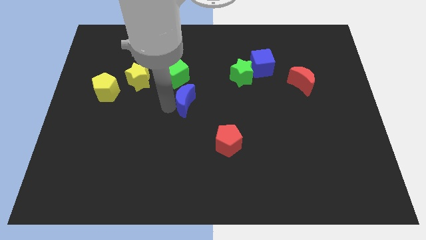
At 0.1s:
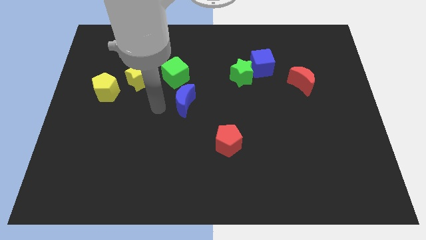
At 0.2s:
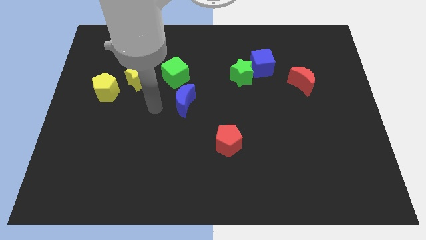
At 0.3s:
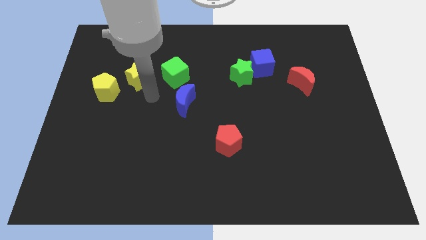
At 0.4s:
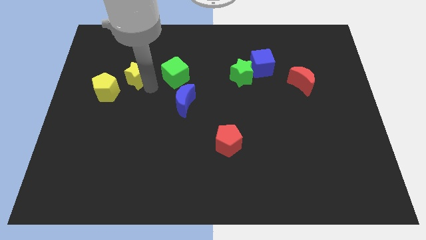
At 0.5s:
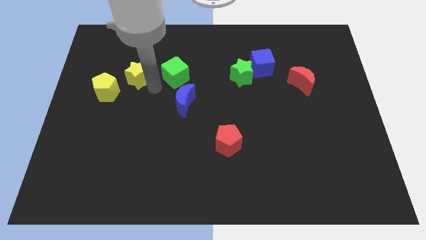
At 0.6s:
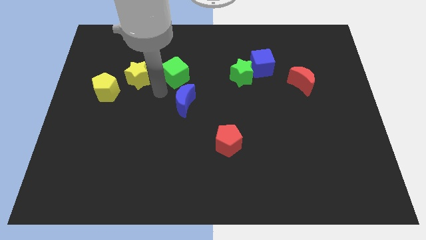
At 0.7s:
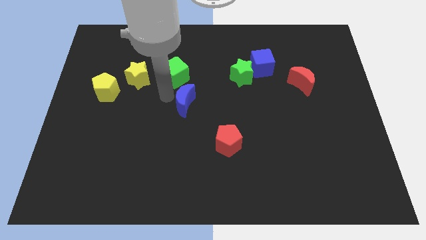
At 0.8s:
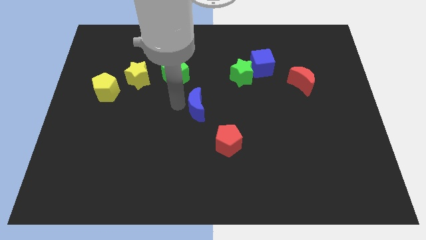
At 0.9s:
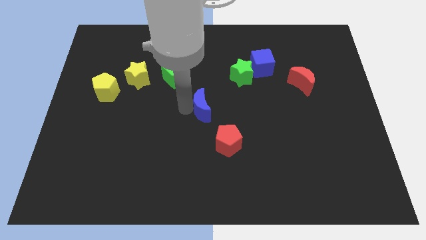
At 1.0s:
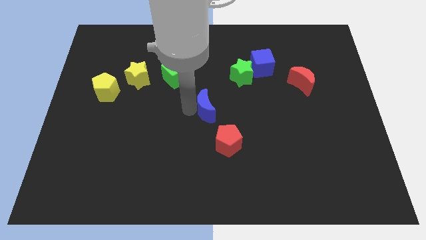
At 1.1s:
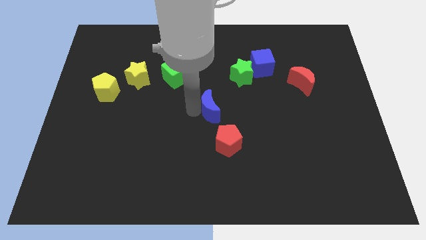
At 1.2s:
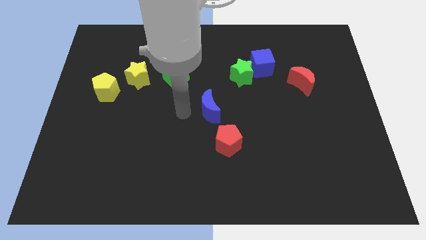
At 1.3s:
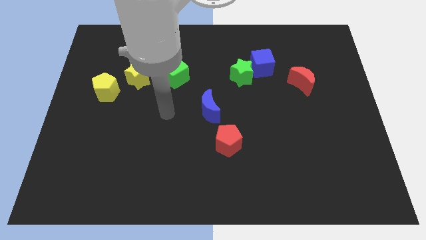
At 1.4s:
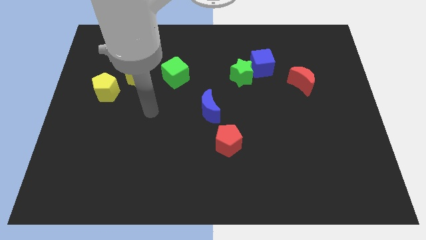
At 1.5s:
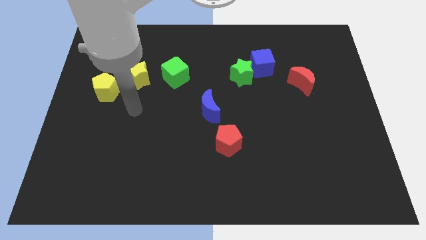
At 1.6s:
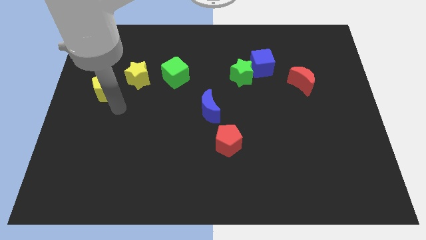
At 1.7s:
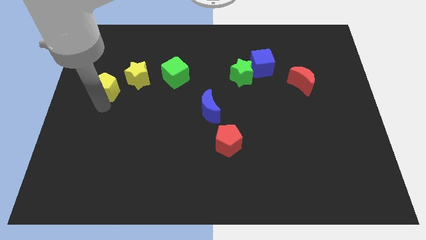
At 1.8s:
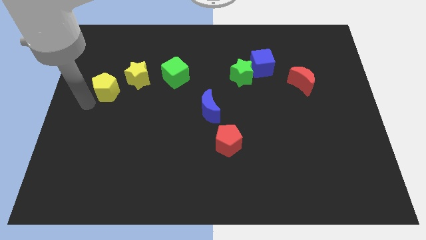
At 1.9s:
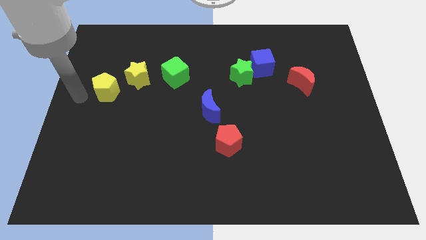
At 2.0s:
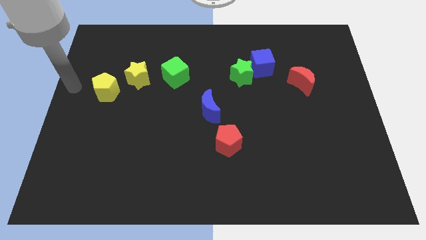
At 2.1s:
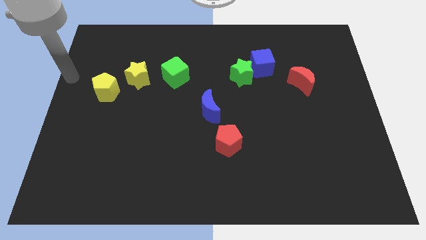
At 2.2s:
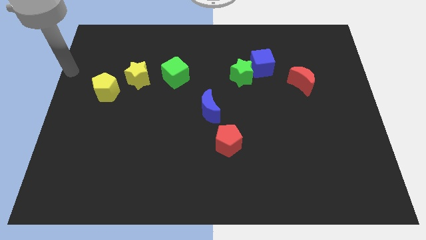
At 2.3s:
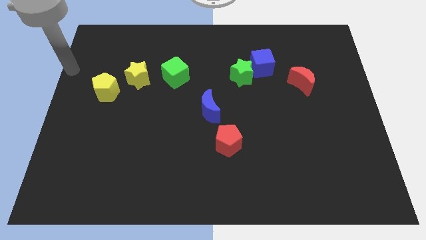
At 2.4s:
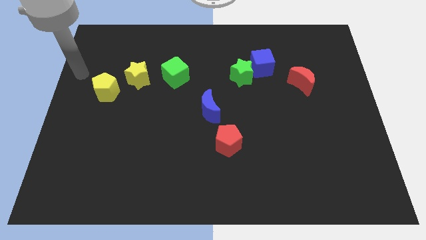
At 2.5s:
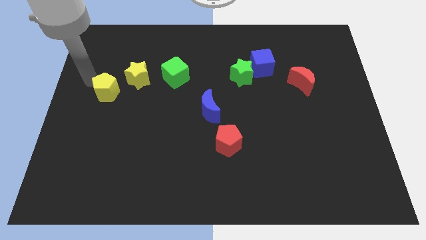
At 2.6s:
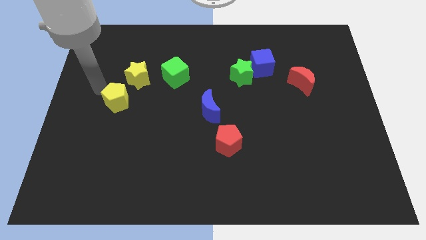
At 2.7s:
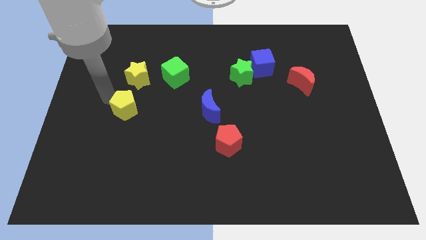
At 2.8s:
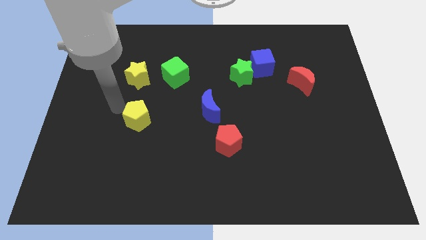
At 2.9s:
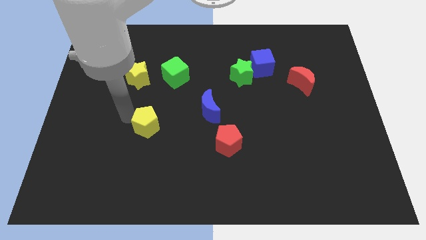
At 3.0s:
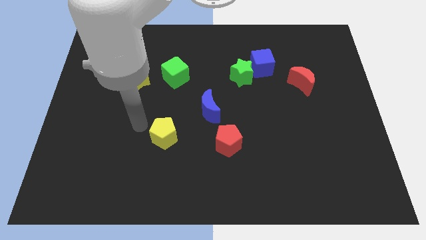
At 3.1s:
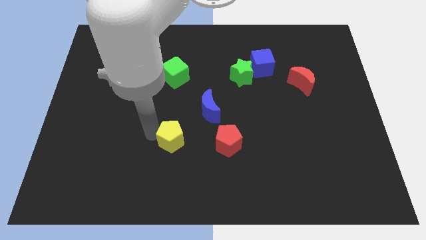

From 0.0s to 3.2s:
move the yellow pentagon and the blue crescent diagonal to each other

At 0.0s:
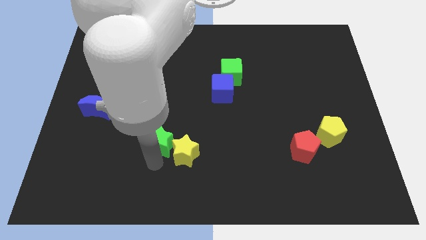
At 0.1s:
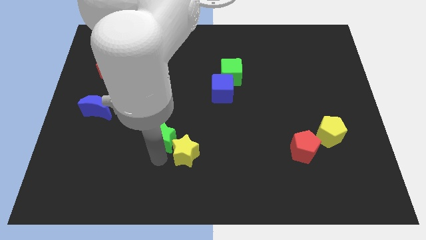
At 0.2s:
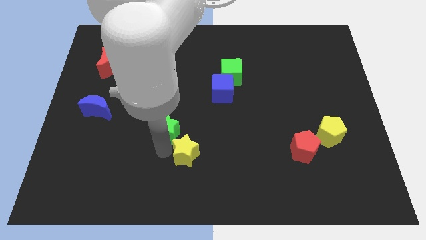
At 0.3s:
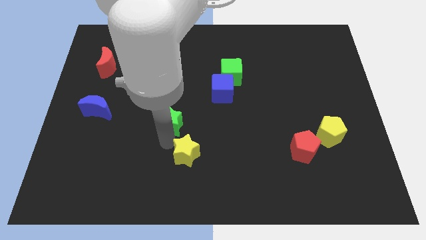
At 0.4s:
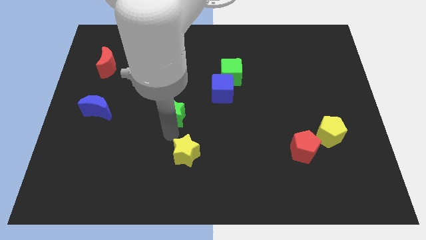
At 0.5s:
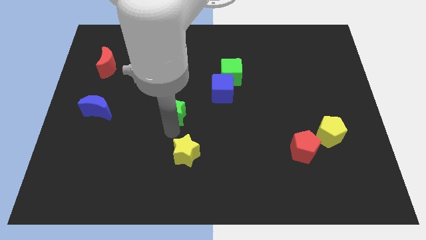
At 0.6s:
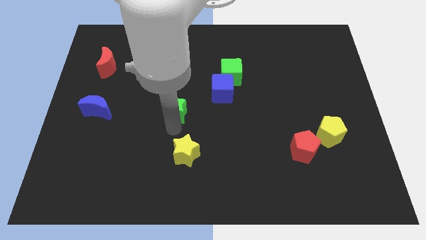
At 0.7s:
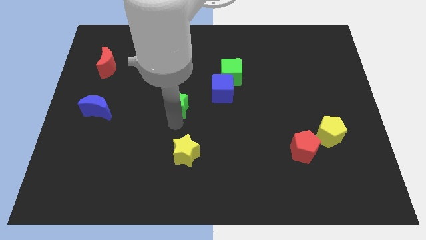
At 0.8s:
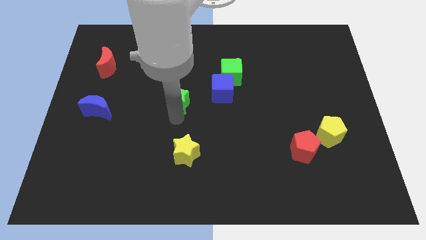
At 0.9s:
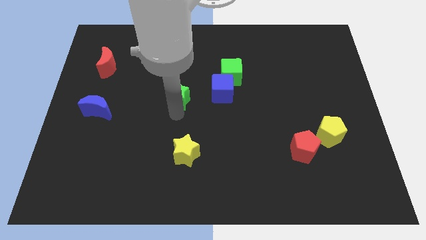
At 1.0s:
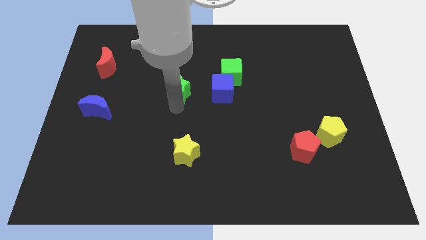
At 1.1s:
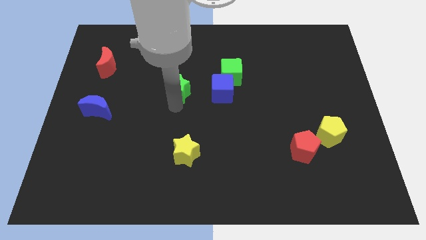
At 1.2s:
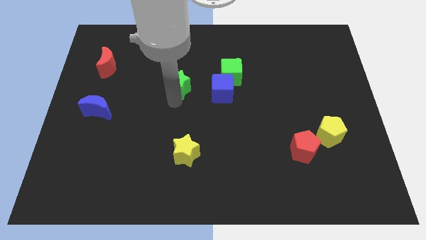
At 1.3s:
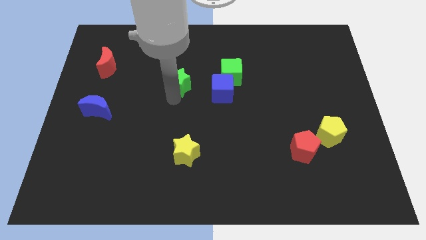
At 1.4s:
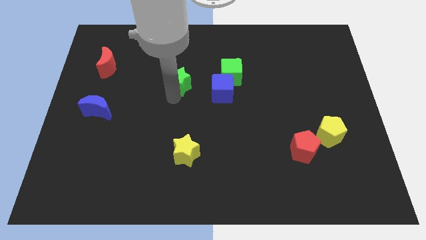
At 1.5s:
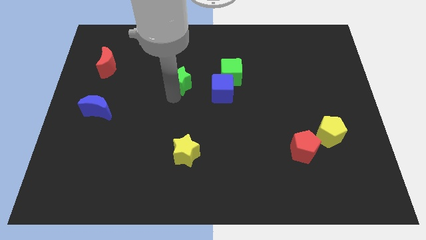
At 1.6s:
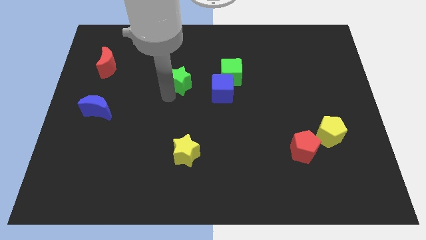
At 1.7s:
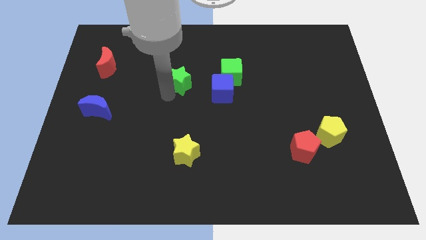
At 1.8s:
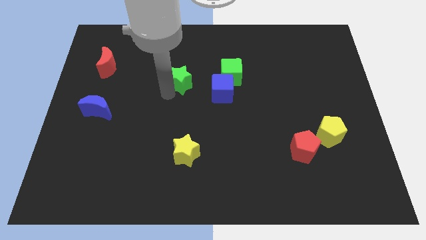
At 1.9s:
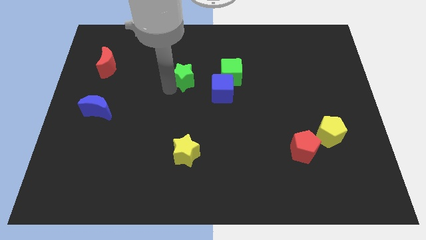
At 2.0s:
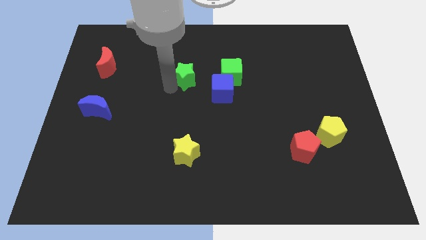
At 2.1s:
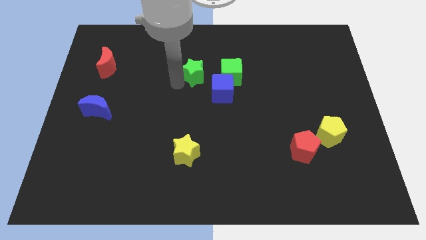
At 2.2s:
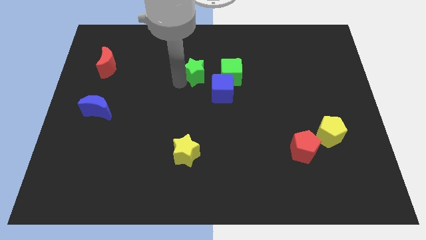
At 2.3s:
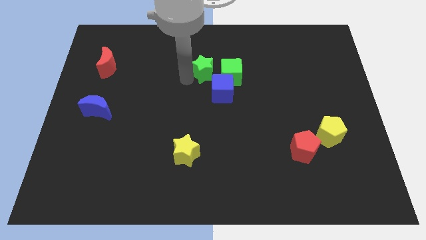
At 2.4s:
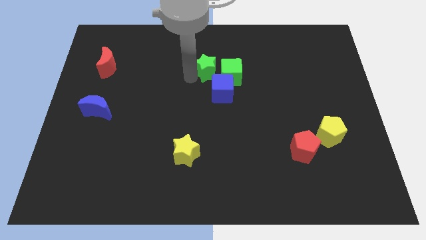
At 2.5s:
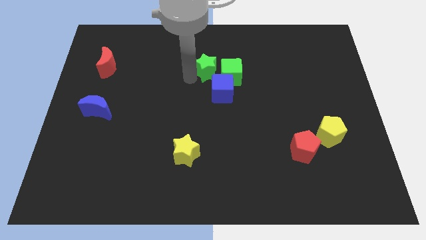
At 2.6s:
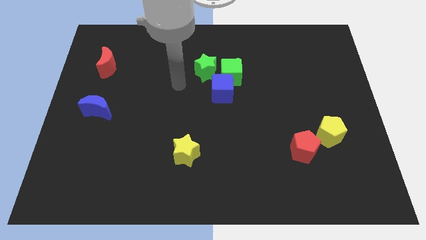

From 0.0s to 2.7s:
place green star left to green cube

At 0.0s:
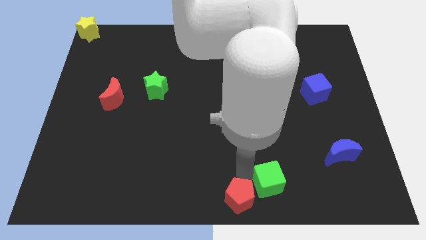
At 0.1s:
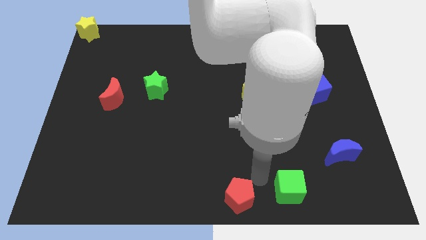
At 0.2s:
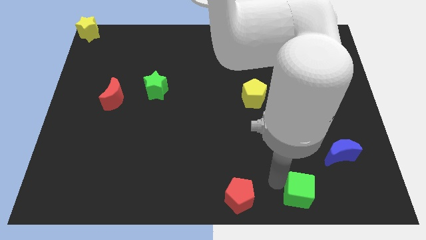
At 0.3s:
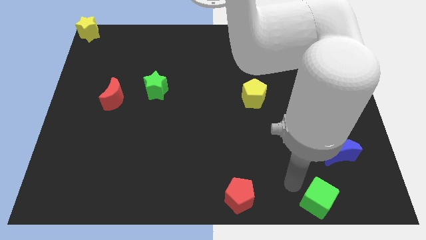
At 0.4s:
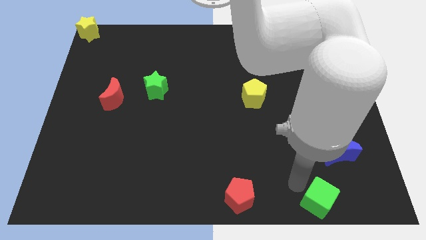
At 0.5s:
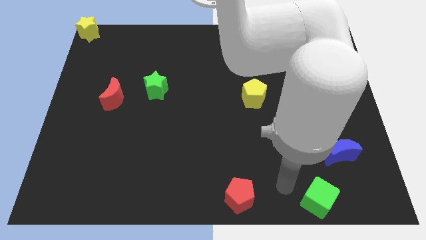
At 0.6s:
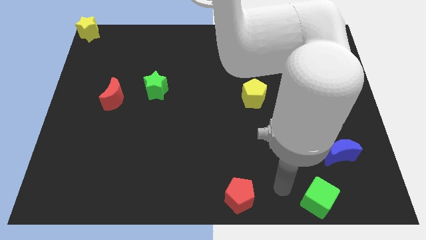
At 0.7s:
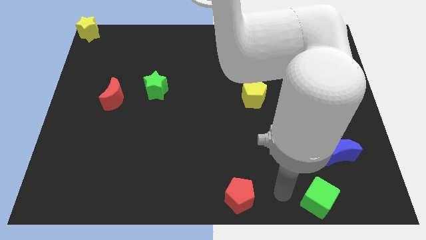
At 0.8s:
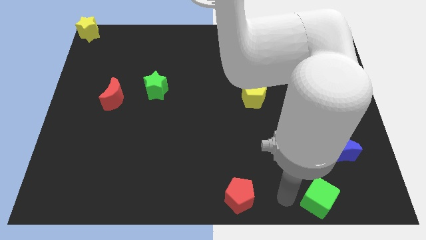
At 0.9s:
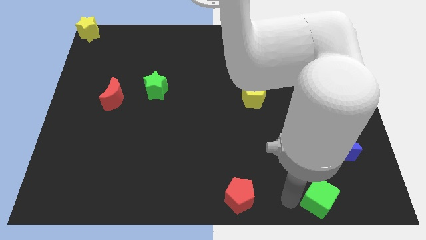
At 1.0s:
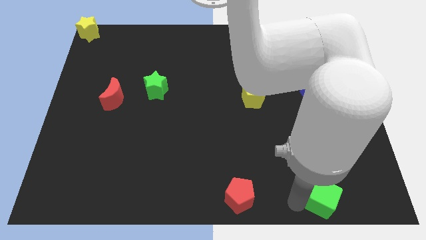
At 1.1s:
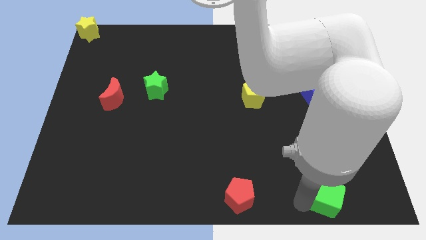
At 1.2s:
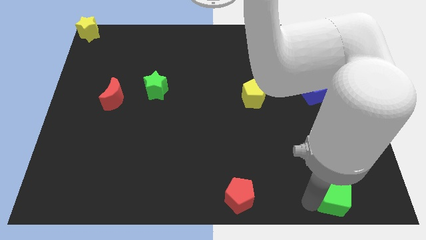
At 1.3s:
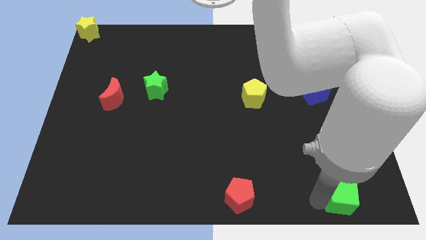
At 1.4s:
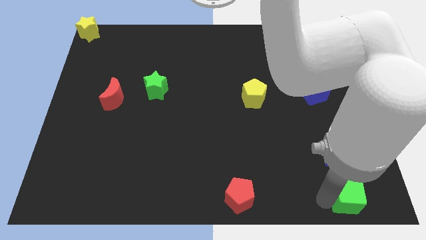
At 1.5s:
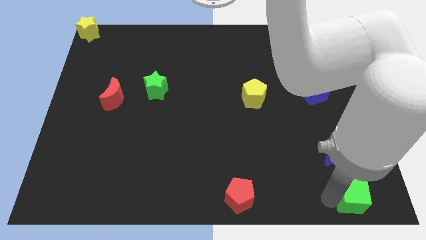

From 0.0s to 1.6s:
place the green cube below the blue moon

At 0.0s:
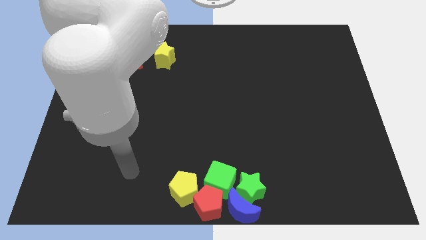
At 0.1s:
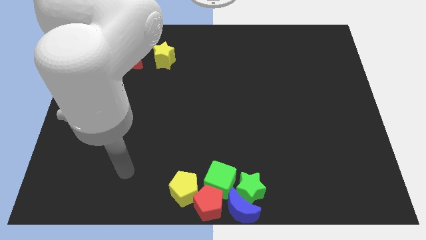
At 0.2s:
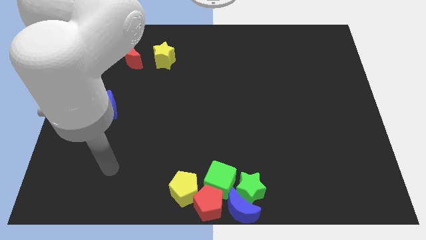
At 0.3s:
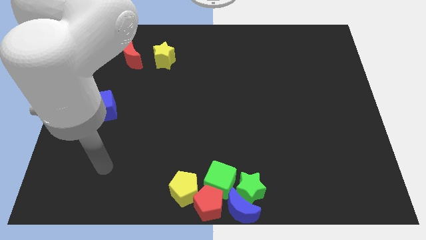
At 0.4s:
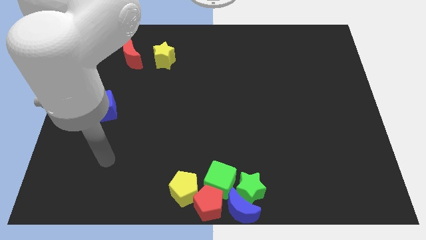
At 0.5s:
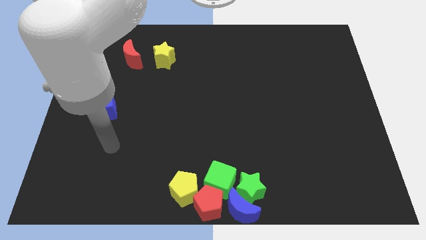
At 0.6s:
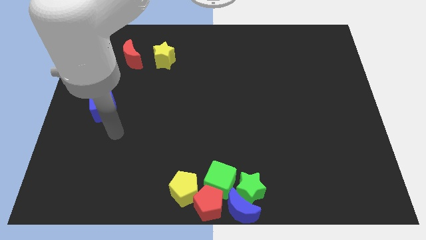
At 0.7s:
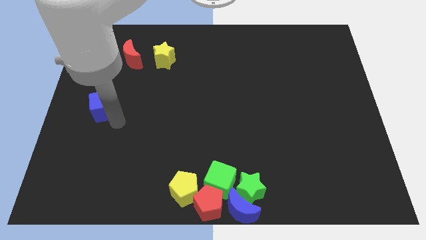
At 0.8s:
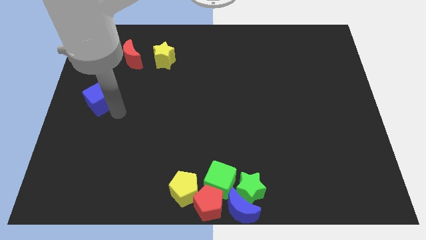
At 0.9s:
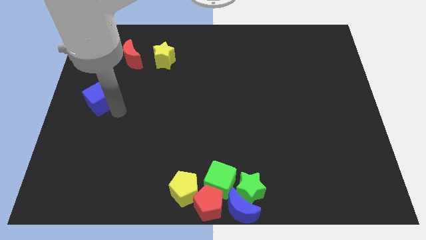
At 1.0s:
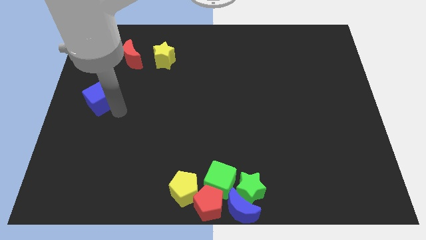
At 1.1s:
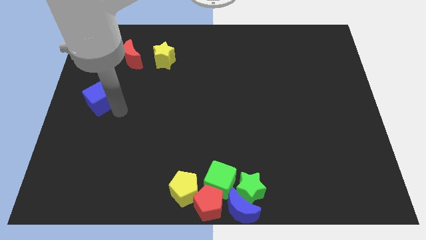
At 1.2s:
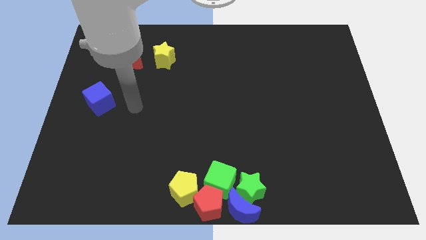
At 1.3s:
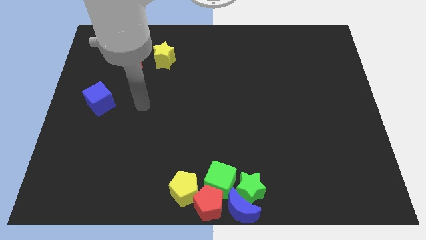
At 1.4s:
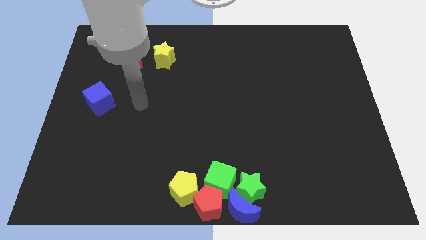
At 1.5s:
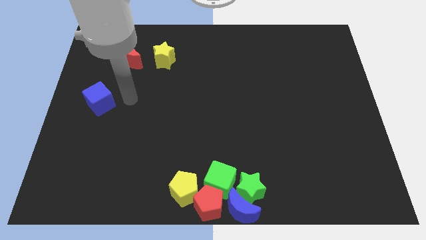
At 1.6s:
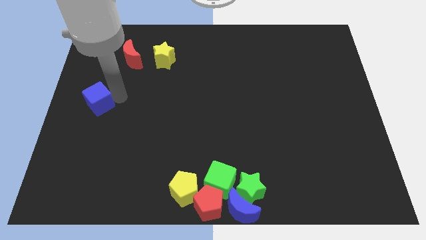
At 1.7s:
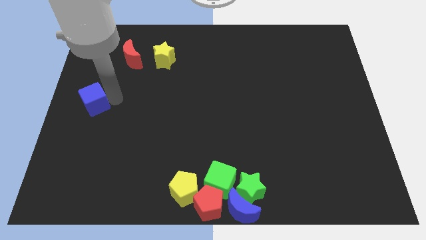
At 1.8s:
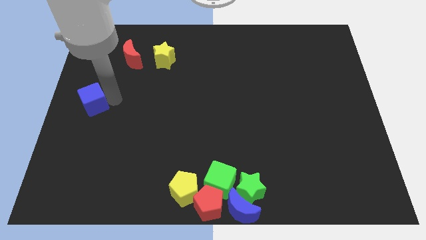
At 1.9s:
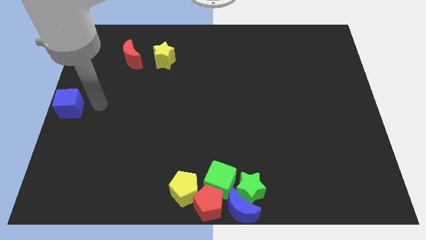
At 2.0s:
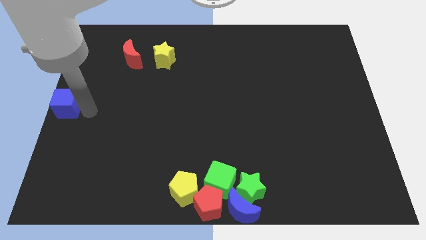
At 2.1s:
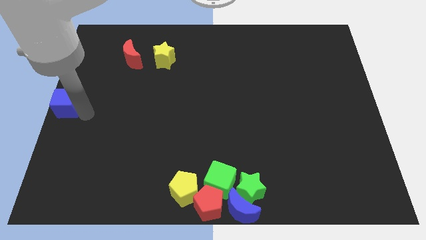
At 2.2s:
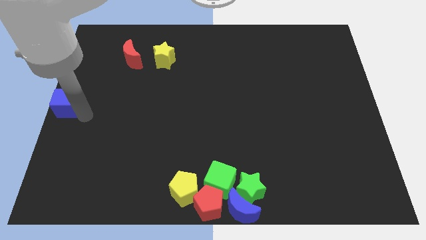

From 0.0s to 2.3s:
move the blue cube to the center left
